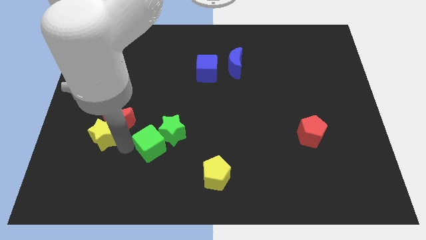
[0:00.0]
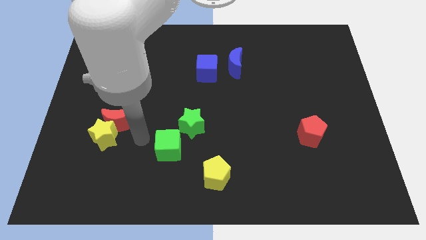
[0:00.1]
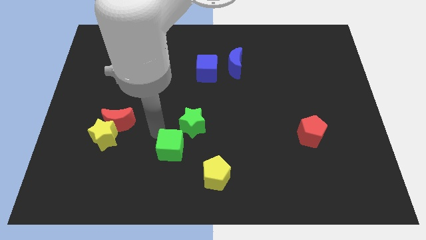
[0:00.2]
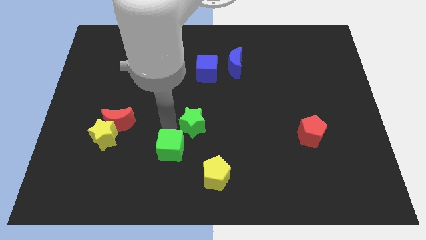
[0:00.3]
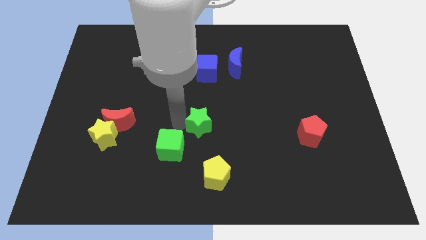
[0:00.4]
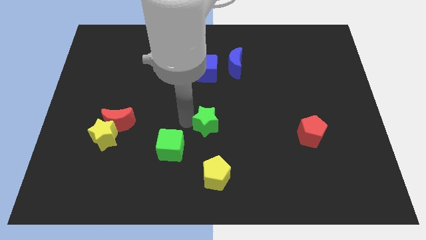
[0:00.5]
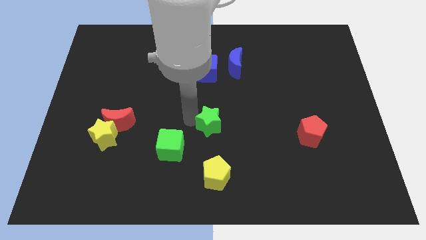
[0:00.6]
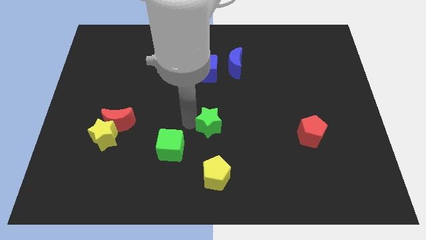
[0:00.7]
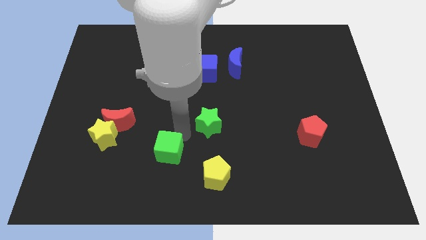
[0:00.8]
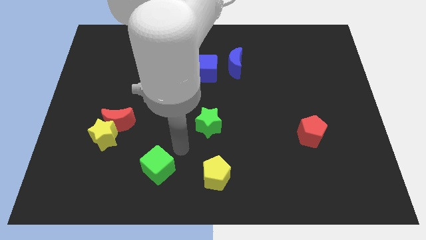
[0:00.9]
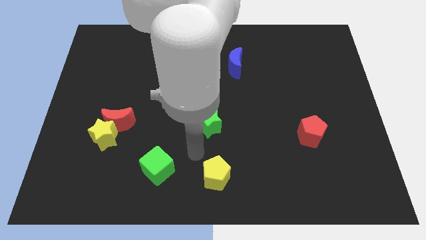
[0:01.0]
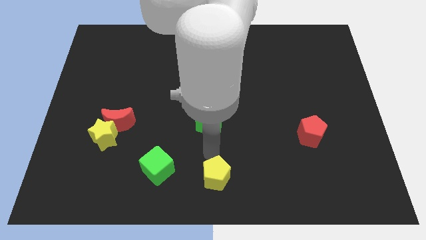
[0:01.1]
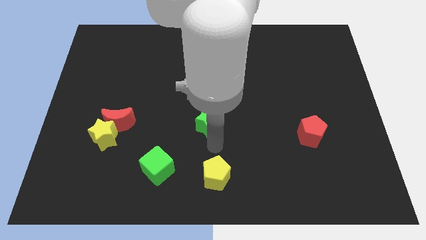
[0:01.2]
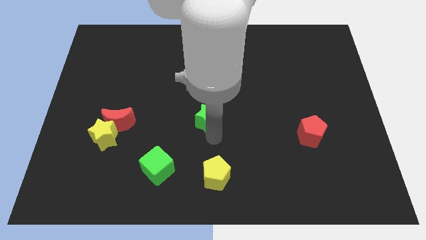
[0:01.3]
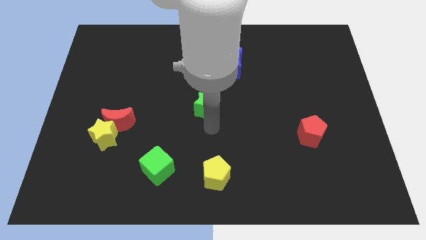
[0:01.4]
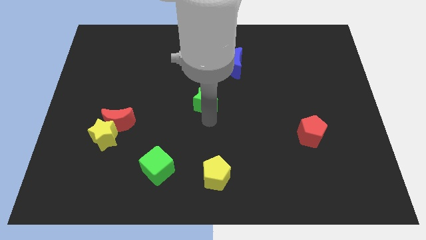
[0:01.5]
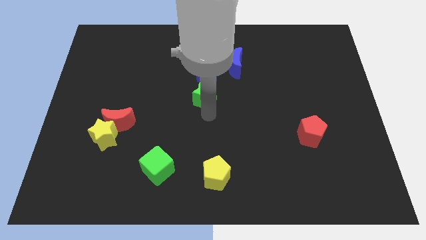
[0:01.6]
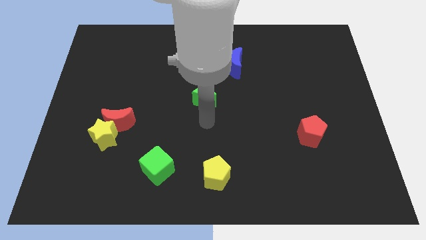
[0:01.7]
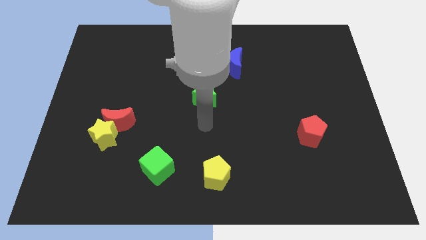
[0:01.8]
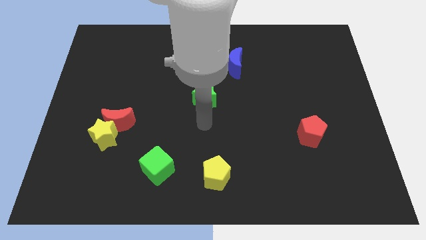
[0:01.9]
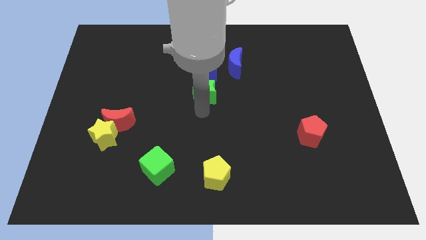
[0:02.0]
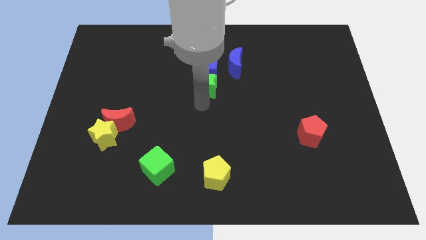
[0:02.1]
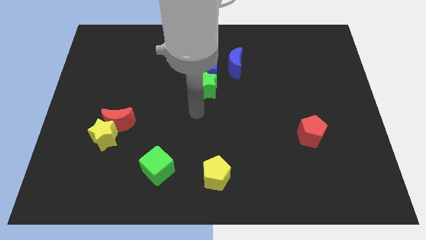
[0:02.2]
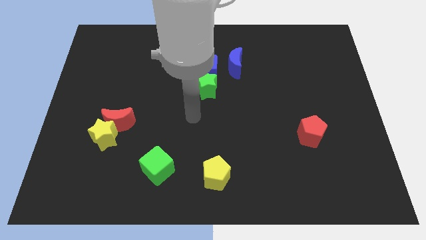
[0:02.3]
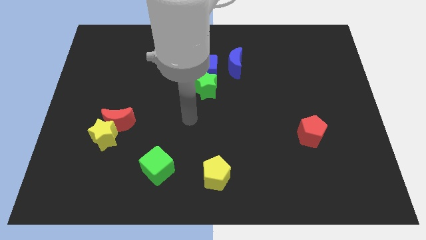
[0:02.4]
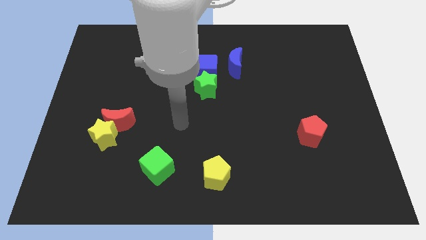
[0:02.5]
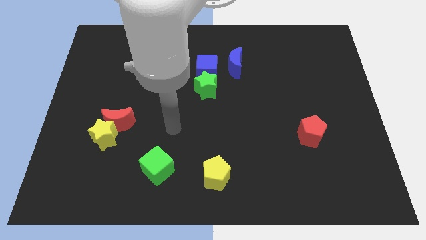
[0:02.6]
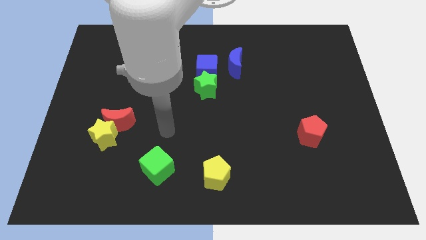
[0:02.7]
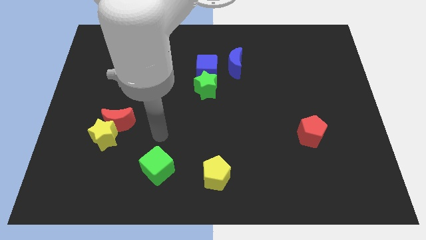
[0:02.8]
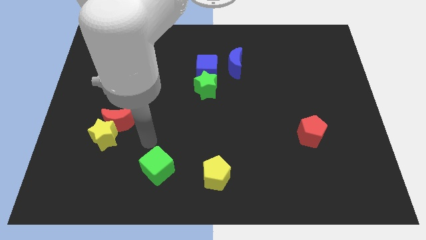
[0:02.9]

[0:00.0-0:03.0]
push the green star to the bottom side of the blue cube

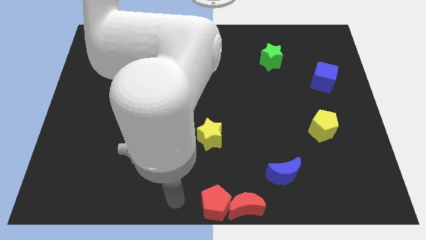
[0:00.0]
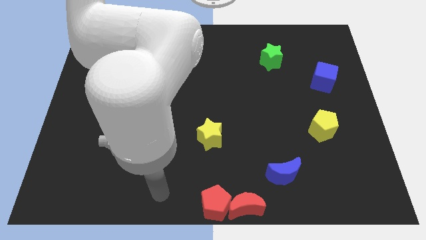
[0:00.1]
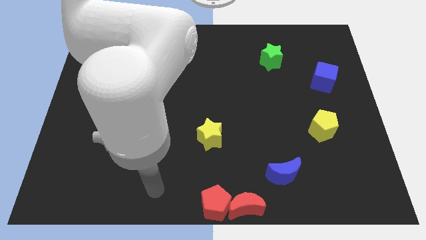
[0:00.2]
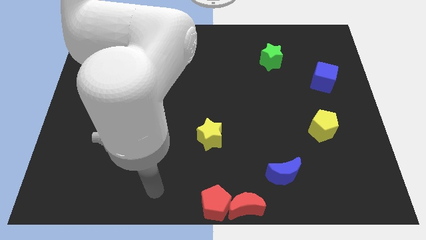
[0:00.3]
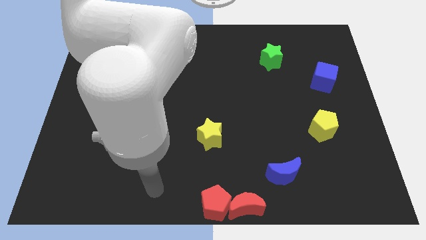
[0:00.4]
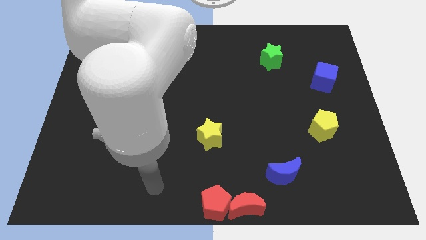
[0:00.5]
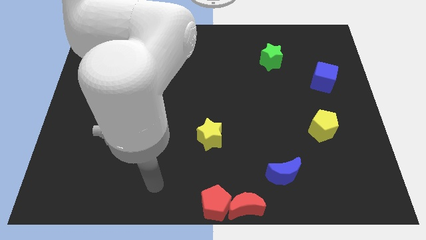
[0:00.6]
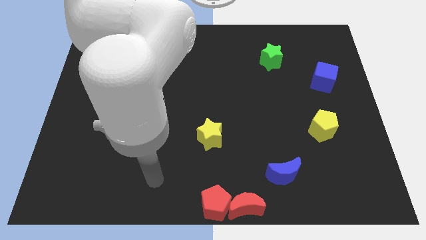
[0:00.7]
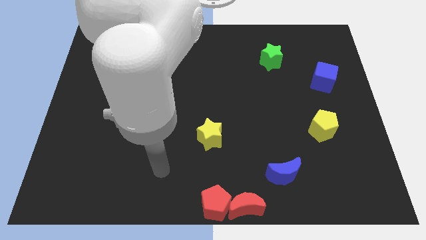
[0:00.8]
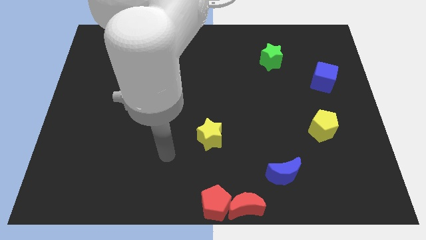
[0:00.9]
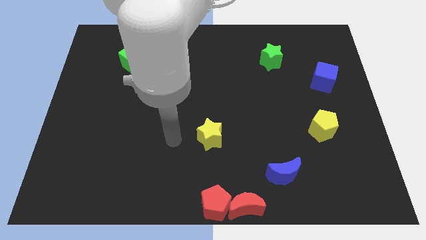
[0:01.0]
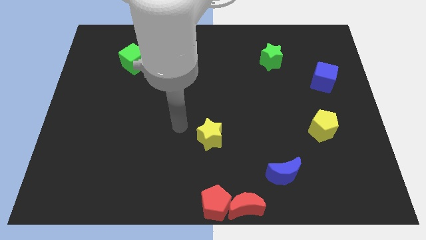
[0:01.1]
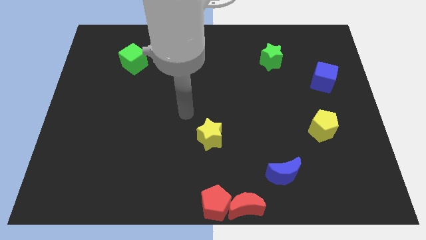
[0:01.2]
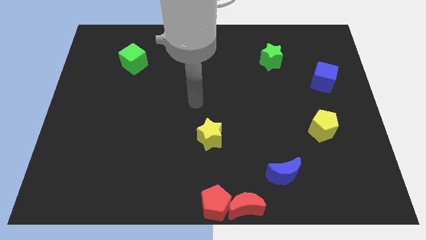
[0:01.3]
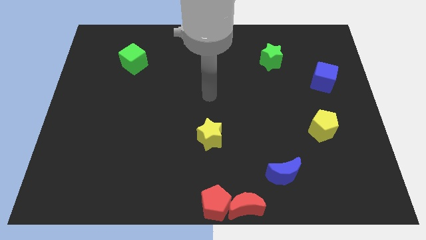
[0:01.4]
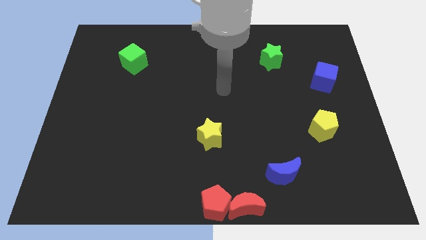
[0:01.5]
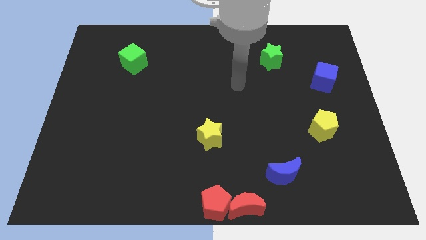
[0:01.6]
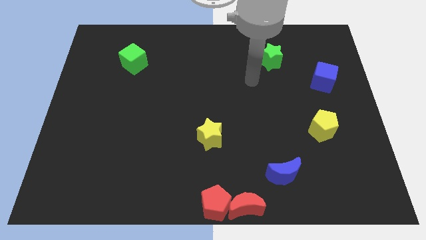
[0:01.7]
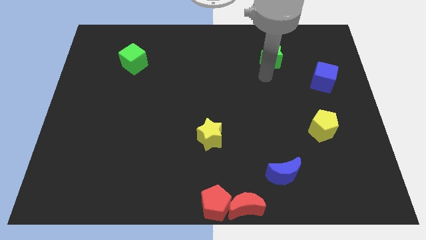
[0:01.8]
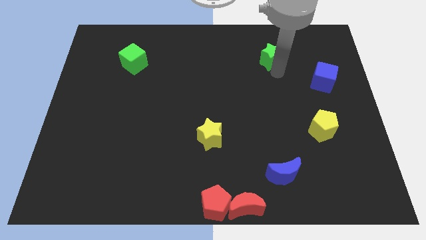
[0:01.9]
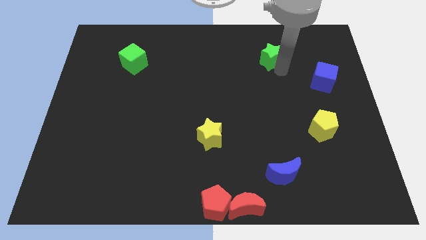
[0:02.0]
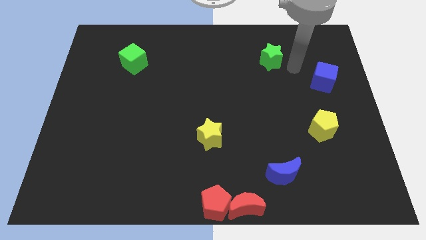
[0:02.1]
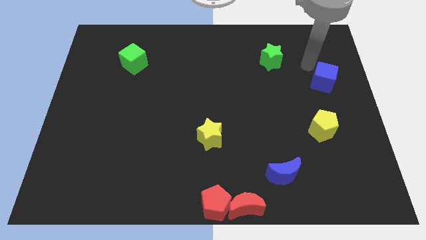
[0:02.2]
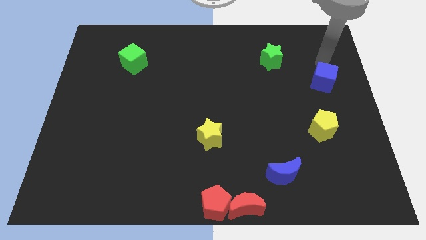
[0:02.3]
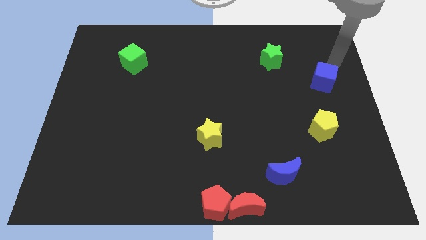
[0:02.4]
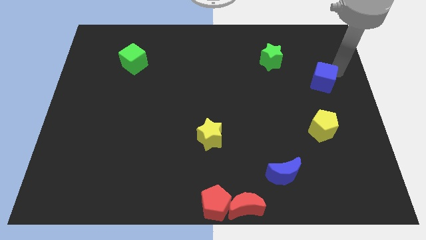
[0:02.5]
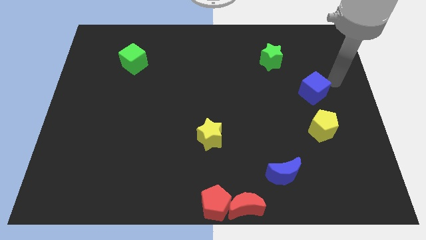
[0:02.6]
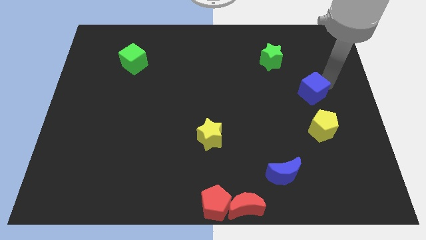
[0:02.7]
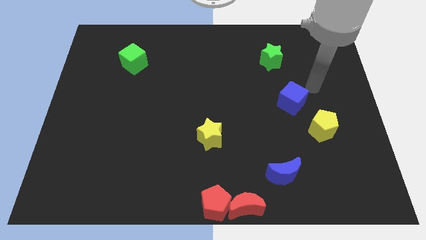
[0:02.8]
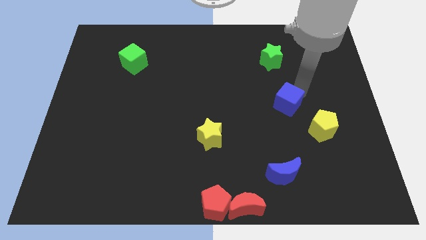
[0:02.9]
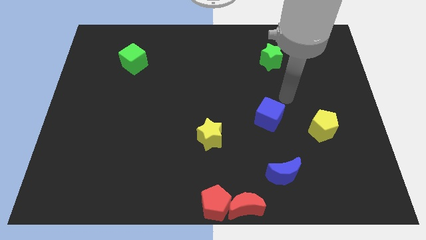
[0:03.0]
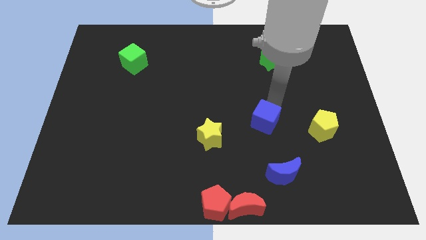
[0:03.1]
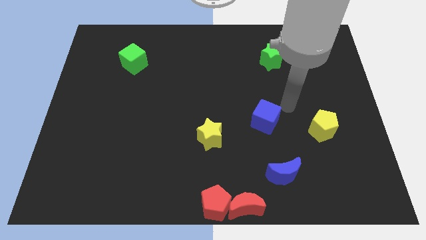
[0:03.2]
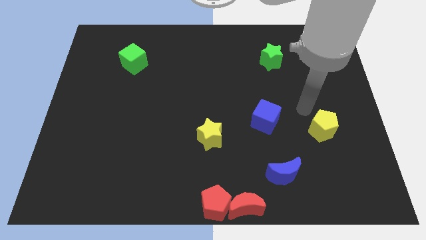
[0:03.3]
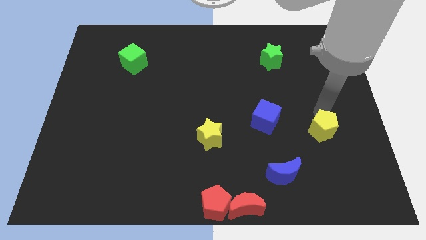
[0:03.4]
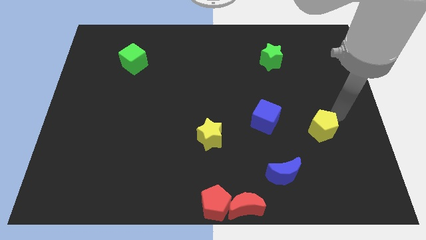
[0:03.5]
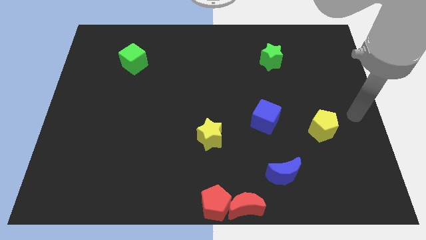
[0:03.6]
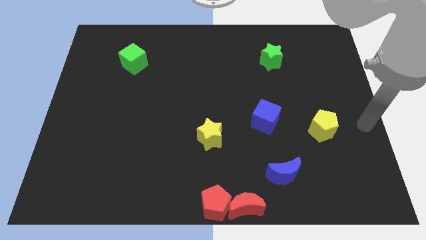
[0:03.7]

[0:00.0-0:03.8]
place the blue cube right to the yellow star

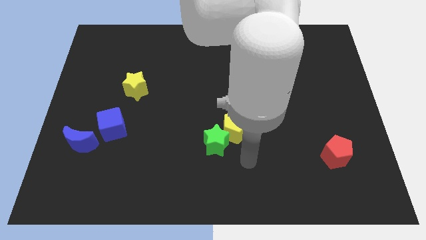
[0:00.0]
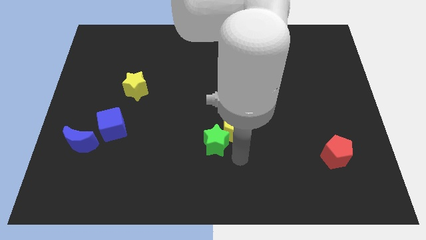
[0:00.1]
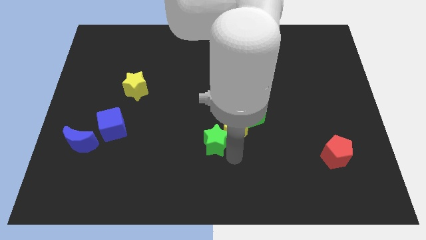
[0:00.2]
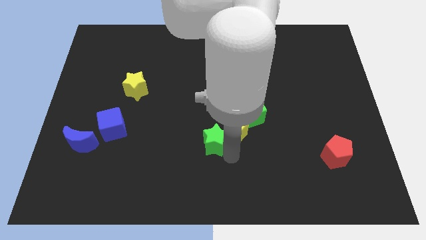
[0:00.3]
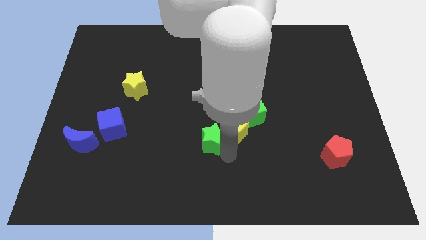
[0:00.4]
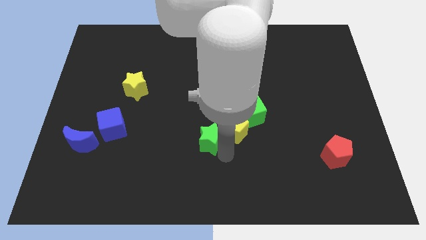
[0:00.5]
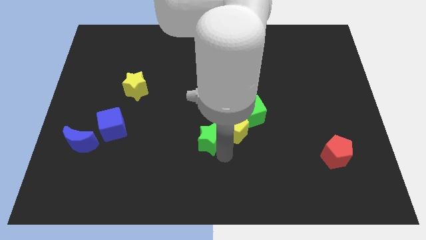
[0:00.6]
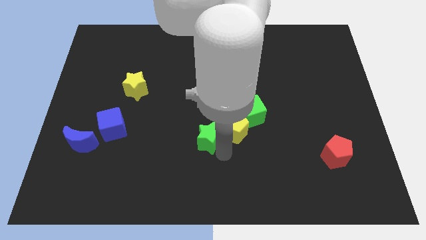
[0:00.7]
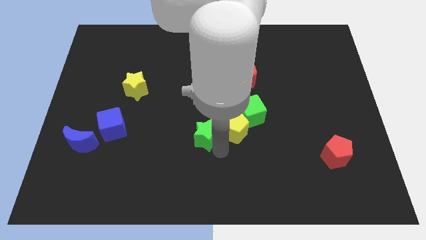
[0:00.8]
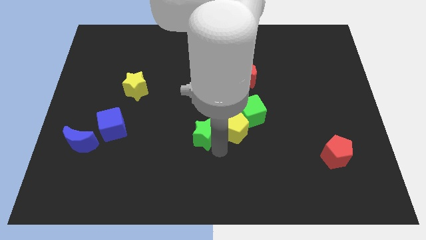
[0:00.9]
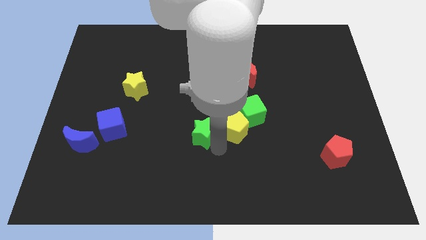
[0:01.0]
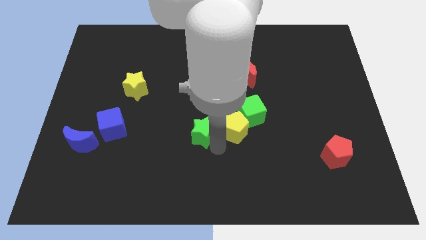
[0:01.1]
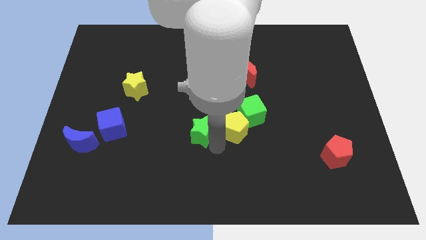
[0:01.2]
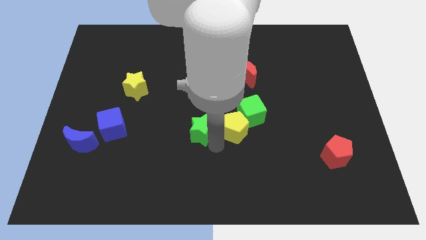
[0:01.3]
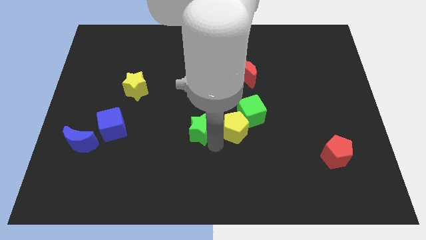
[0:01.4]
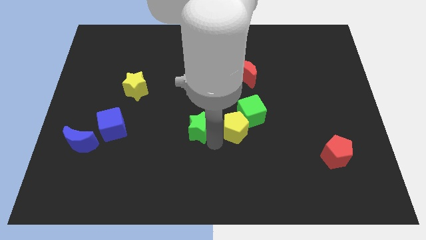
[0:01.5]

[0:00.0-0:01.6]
separate the green star from the yellow pentagon

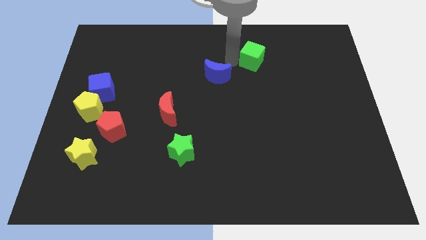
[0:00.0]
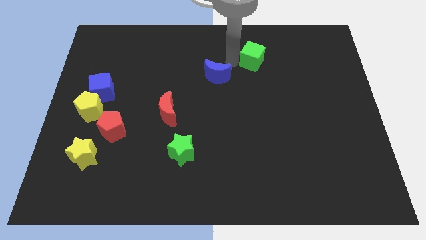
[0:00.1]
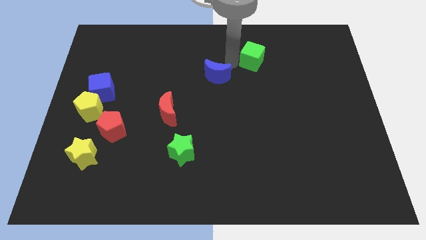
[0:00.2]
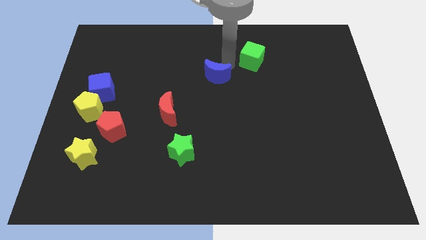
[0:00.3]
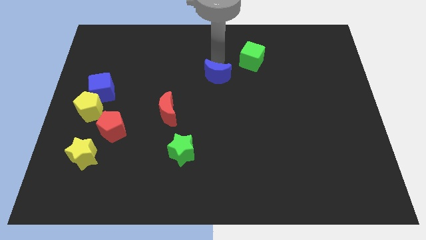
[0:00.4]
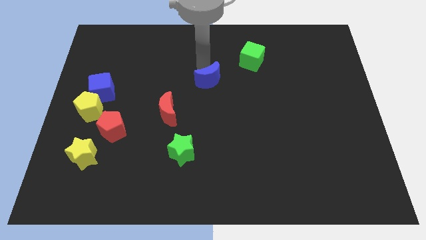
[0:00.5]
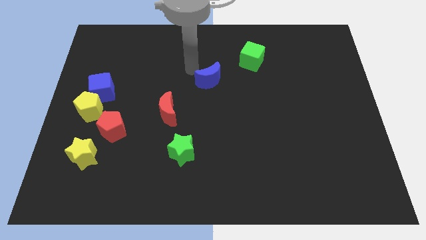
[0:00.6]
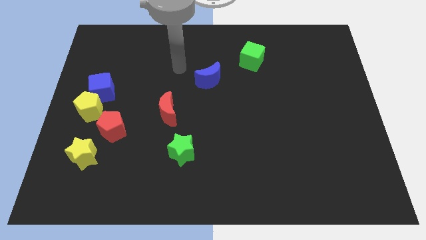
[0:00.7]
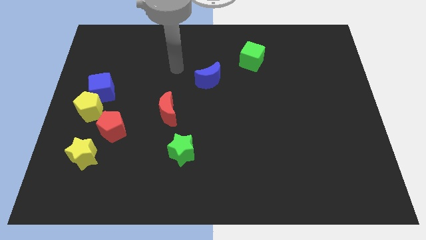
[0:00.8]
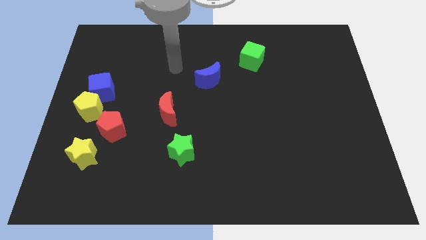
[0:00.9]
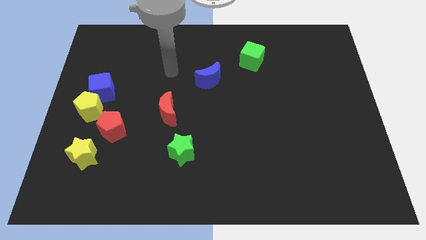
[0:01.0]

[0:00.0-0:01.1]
tap at the top side of the blue crescent
